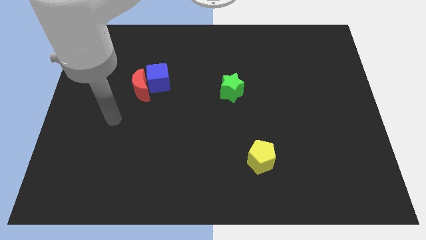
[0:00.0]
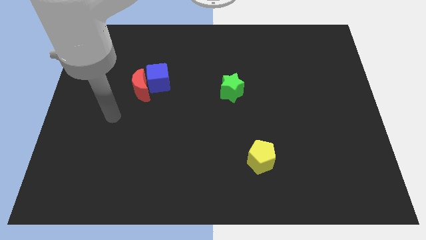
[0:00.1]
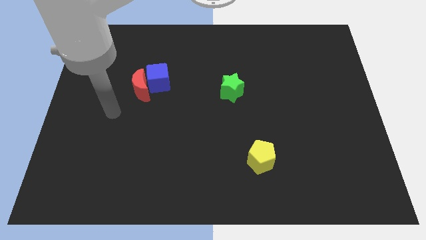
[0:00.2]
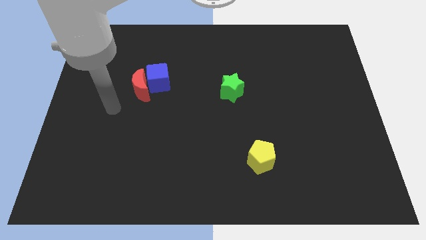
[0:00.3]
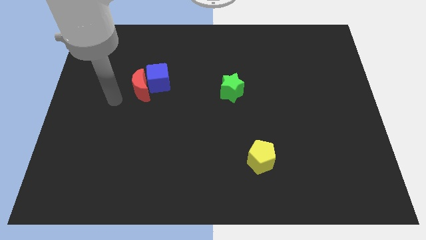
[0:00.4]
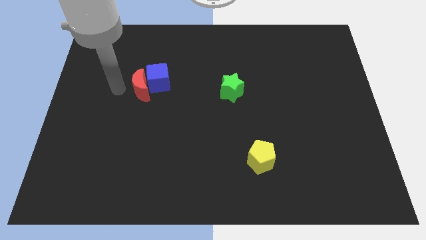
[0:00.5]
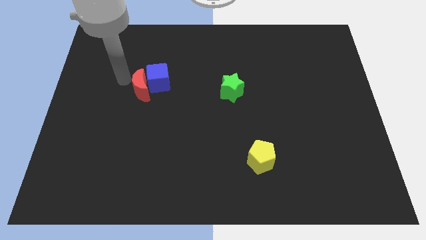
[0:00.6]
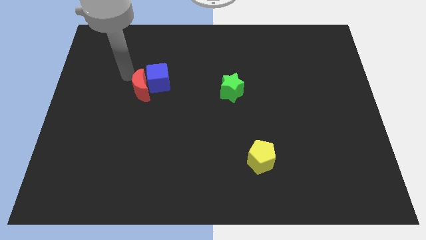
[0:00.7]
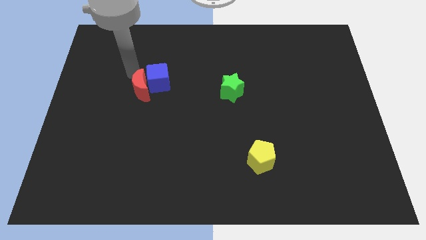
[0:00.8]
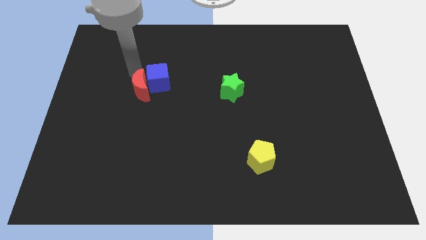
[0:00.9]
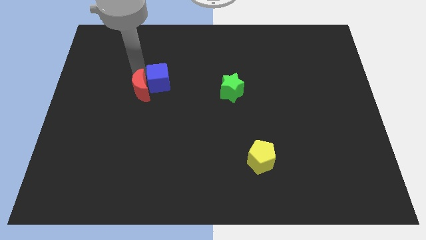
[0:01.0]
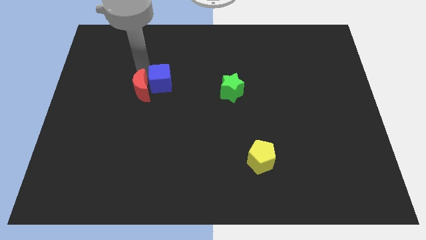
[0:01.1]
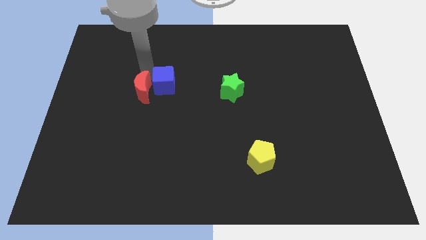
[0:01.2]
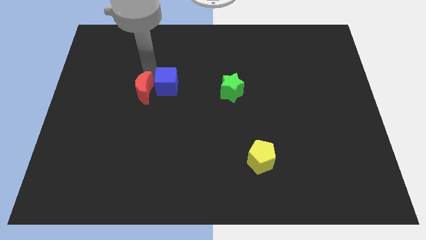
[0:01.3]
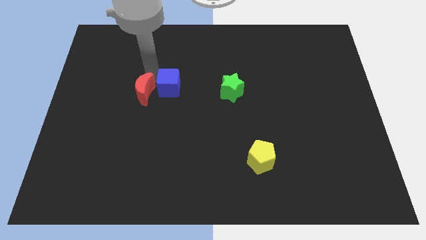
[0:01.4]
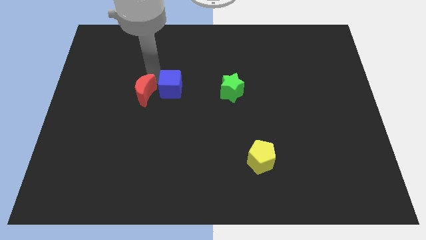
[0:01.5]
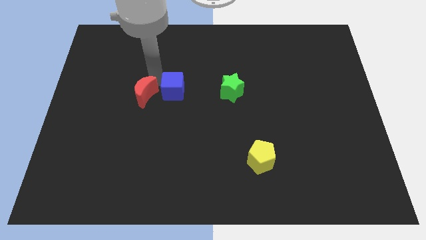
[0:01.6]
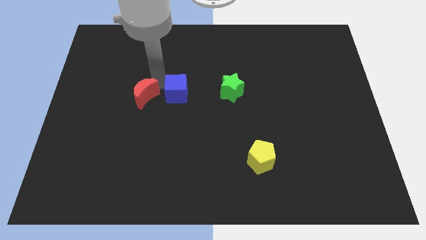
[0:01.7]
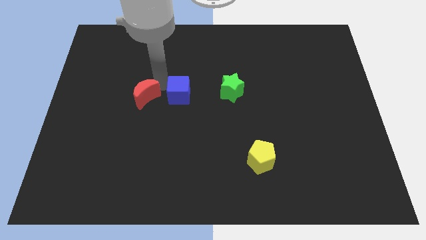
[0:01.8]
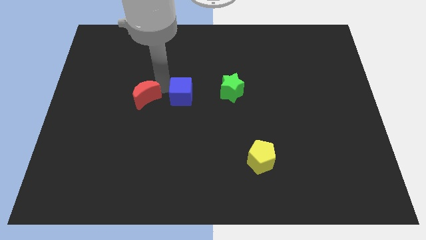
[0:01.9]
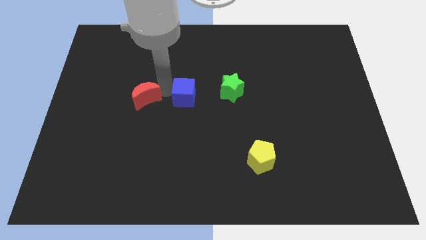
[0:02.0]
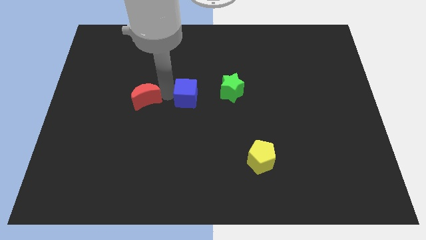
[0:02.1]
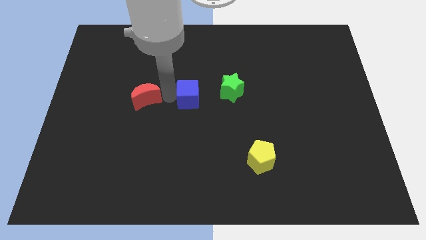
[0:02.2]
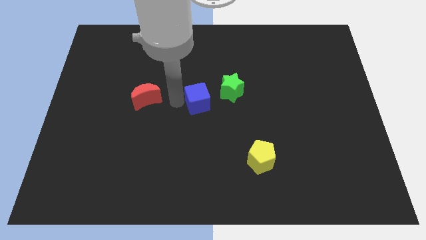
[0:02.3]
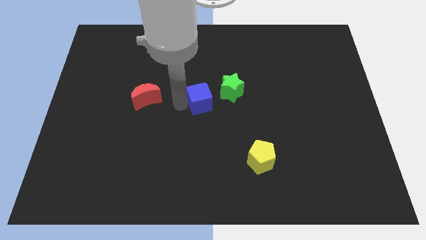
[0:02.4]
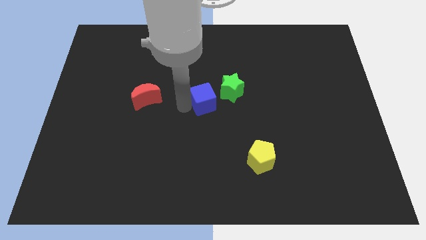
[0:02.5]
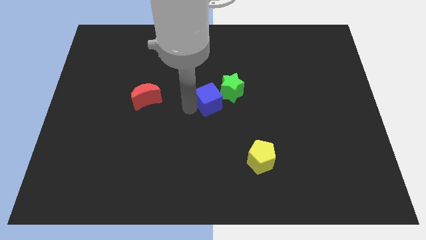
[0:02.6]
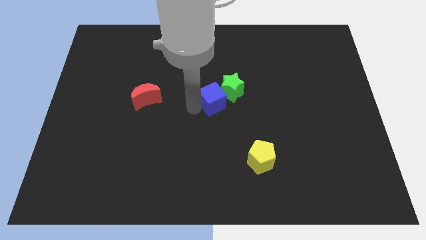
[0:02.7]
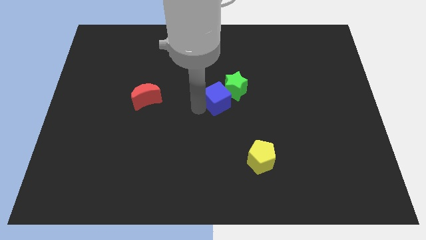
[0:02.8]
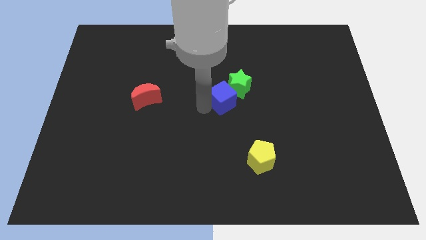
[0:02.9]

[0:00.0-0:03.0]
move the blue cube to the star

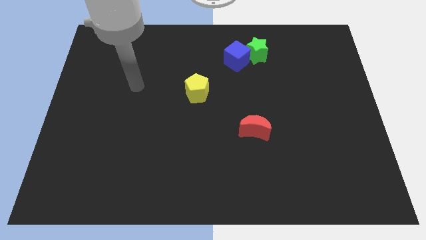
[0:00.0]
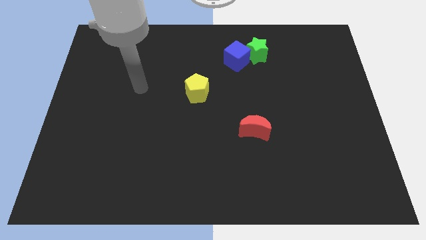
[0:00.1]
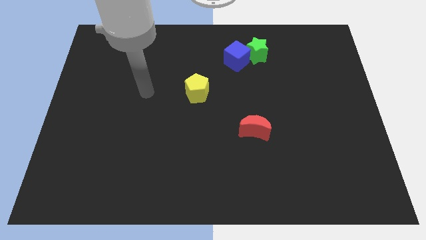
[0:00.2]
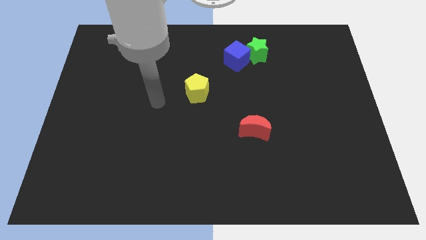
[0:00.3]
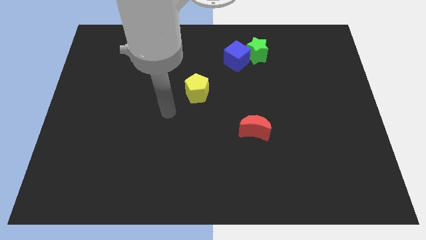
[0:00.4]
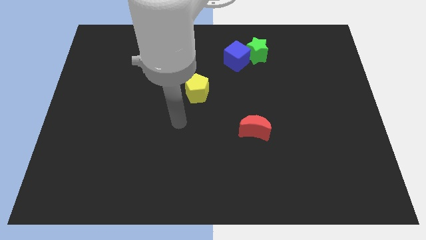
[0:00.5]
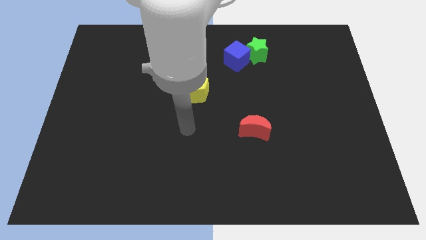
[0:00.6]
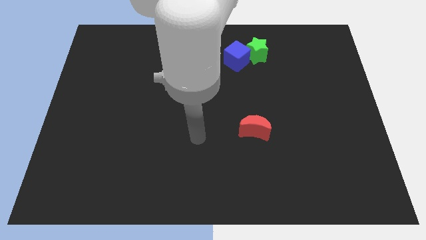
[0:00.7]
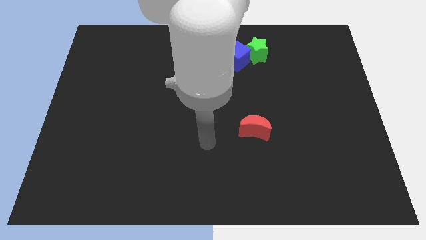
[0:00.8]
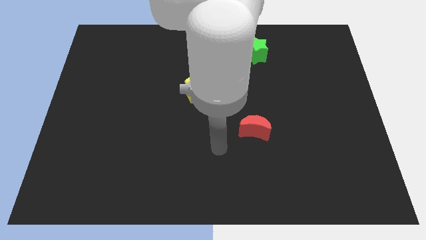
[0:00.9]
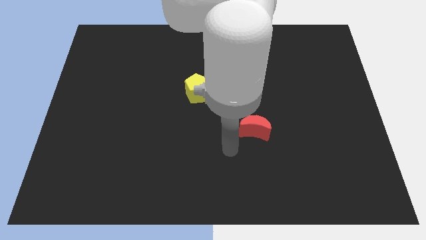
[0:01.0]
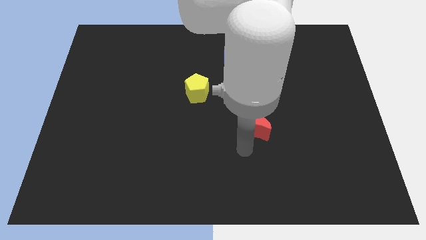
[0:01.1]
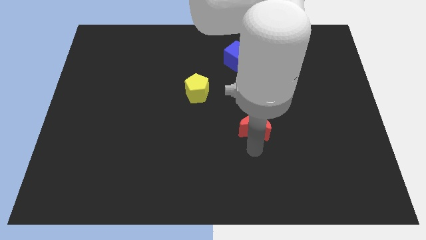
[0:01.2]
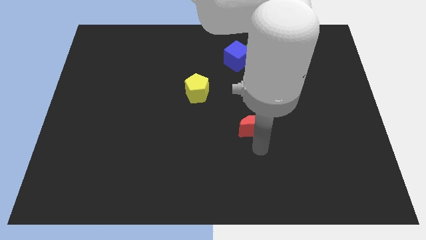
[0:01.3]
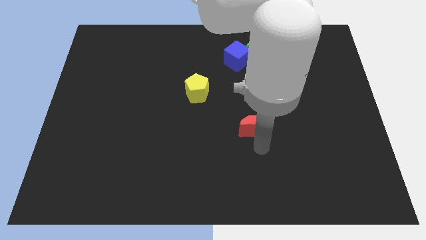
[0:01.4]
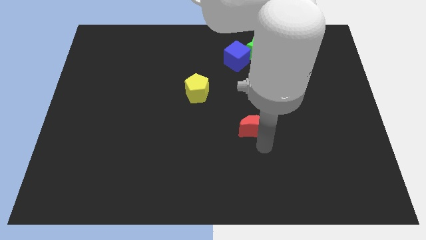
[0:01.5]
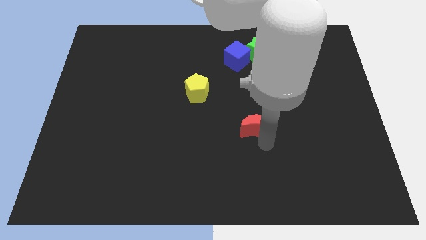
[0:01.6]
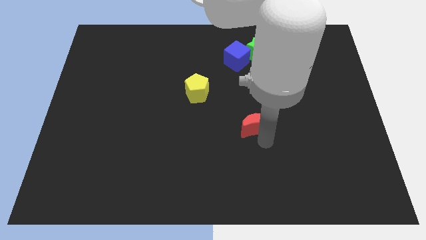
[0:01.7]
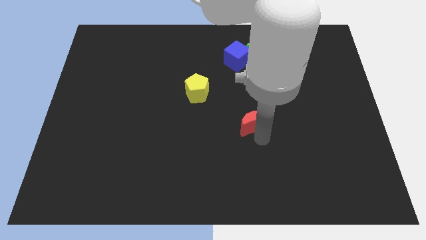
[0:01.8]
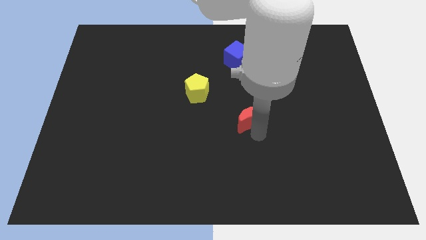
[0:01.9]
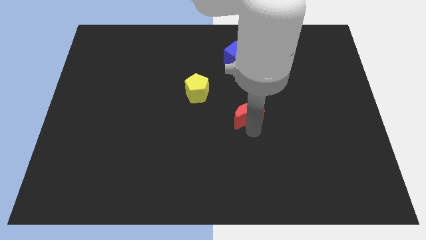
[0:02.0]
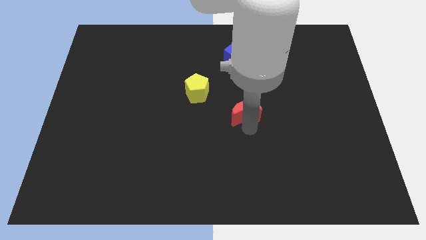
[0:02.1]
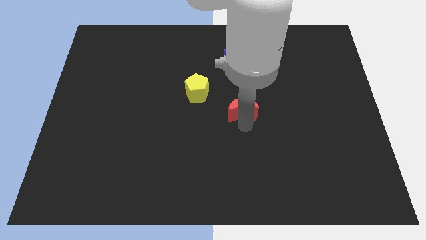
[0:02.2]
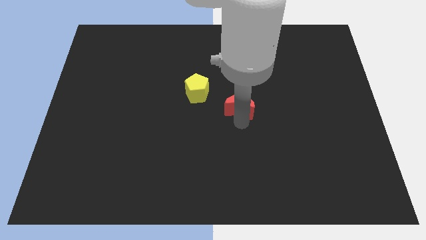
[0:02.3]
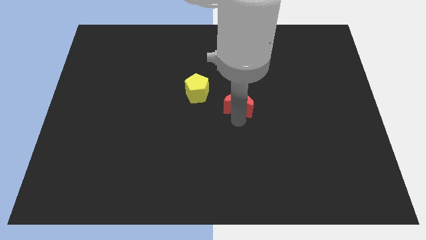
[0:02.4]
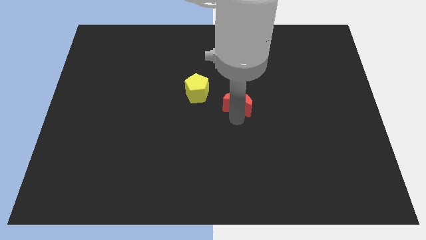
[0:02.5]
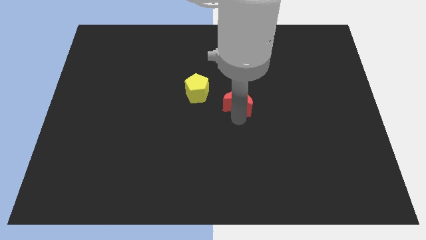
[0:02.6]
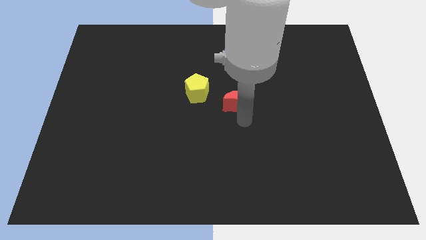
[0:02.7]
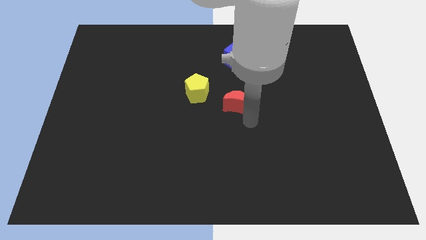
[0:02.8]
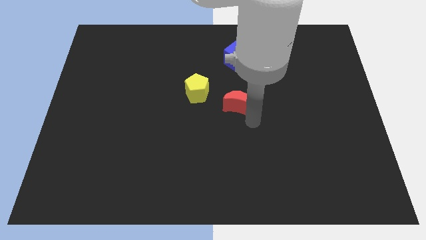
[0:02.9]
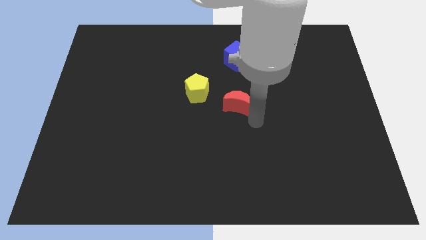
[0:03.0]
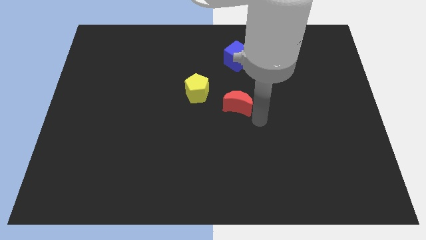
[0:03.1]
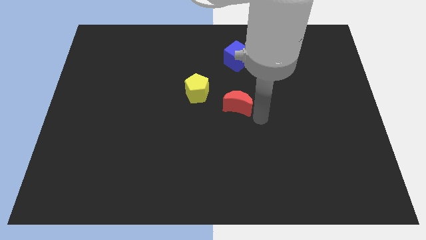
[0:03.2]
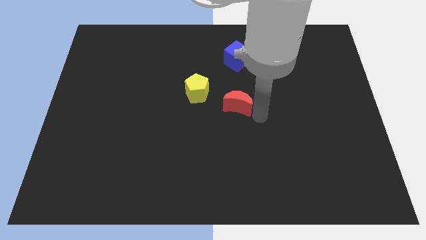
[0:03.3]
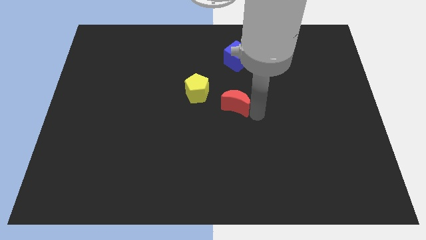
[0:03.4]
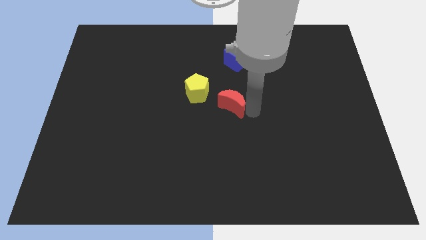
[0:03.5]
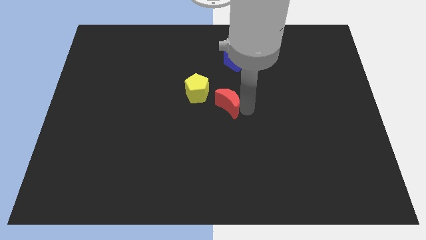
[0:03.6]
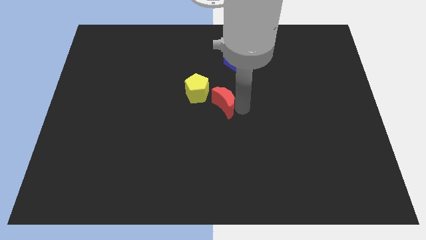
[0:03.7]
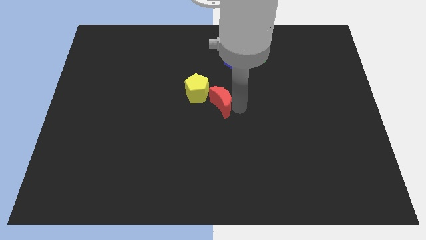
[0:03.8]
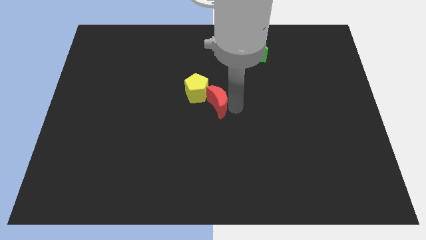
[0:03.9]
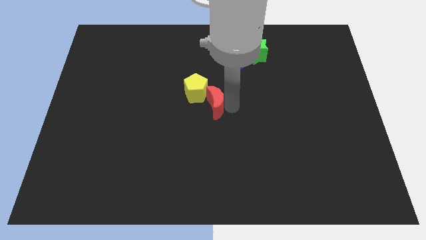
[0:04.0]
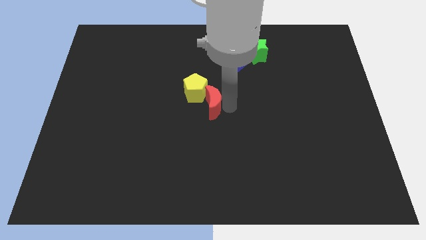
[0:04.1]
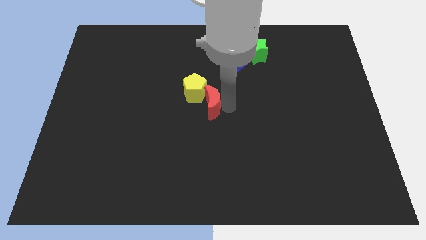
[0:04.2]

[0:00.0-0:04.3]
slide the red block towards the yellow block

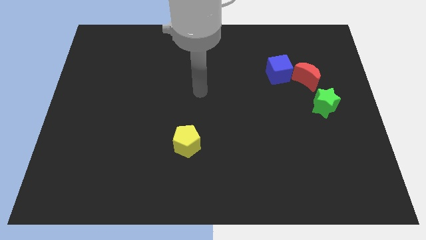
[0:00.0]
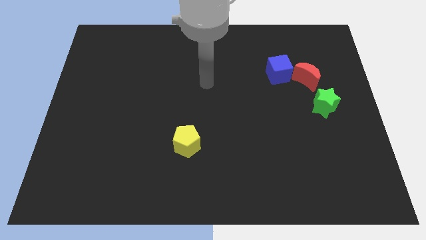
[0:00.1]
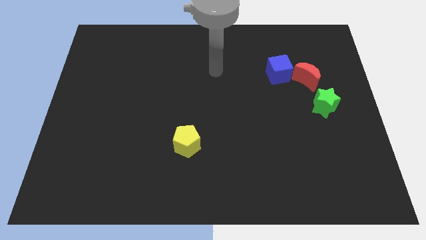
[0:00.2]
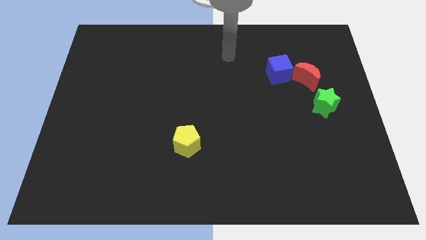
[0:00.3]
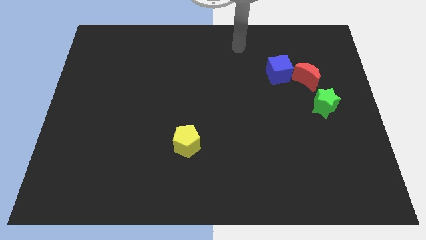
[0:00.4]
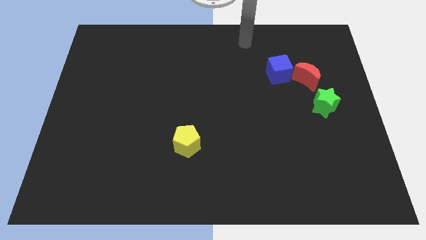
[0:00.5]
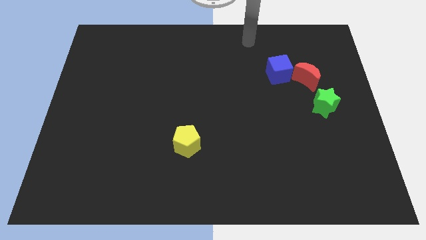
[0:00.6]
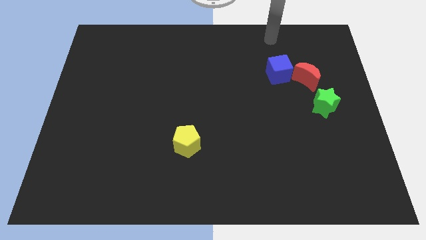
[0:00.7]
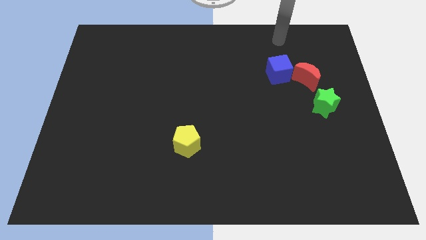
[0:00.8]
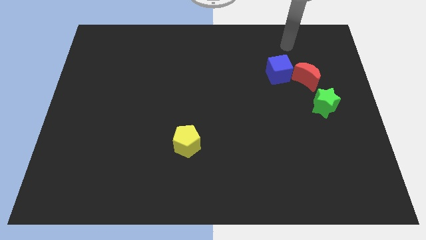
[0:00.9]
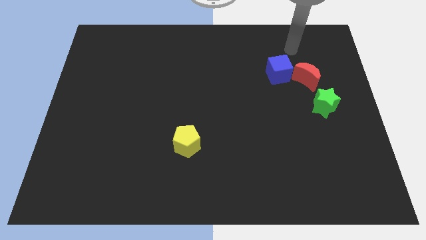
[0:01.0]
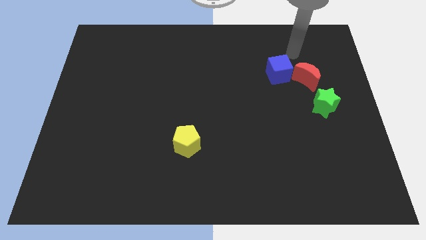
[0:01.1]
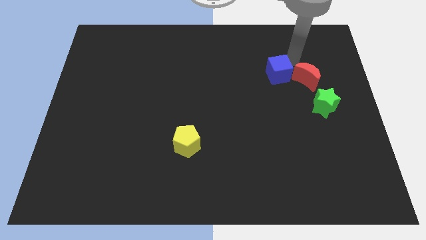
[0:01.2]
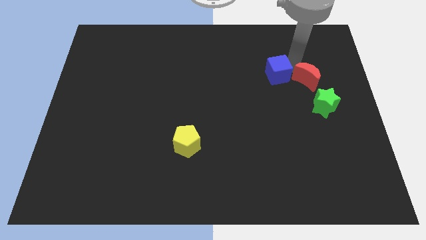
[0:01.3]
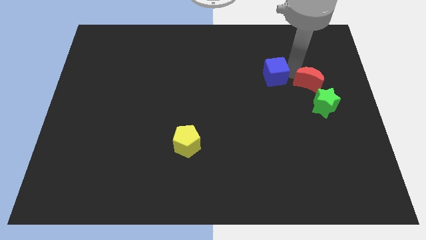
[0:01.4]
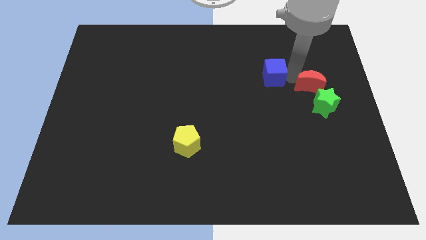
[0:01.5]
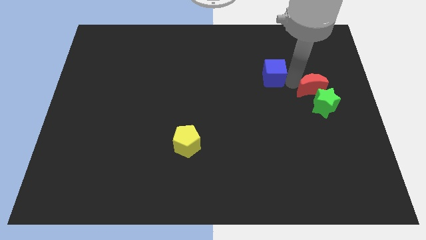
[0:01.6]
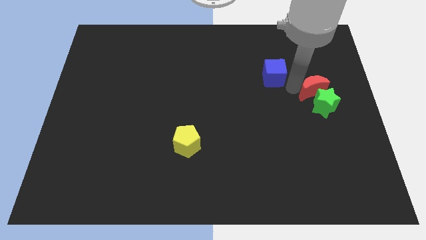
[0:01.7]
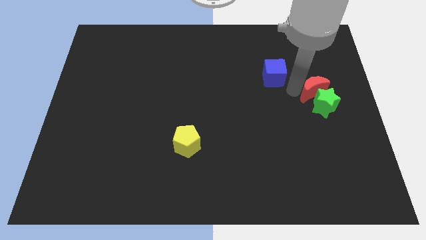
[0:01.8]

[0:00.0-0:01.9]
put the red moon towards the green star
